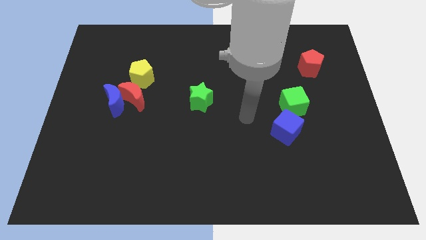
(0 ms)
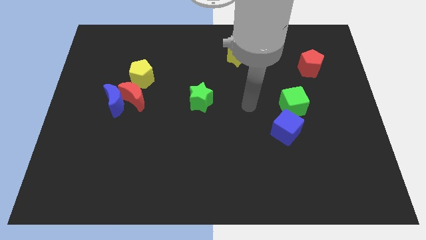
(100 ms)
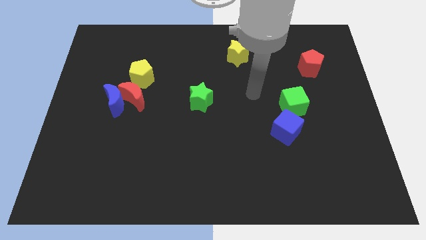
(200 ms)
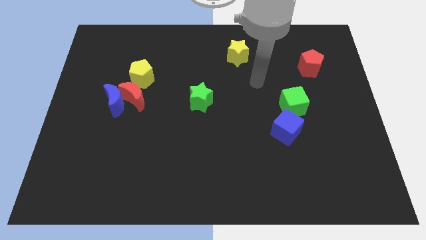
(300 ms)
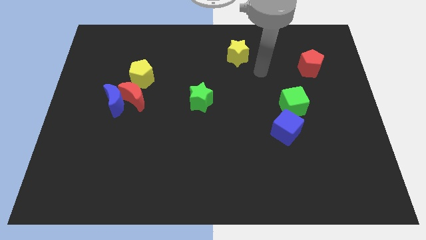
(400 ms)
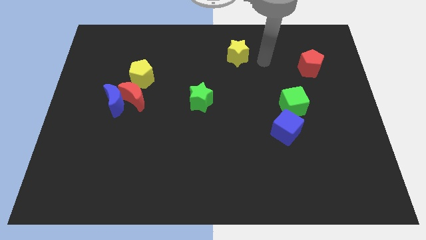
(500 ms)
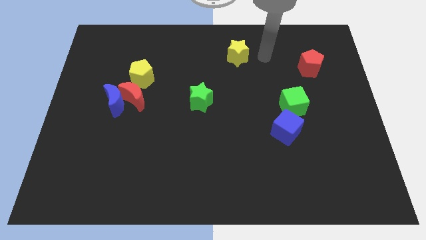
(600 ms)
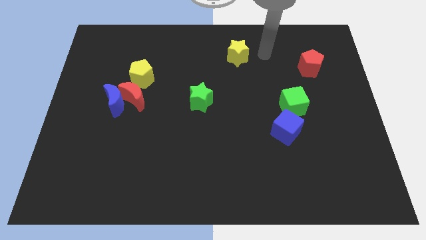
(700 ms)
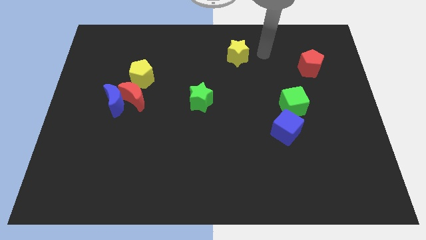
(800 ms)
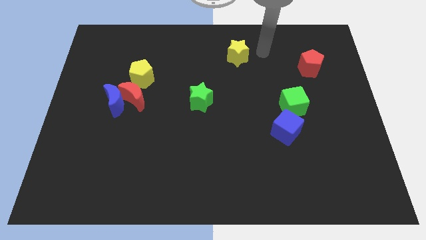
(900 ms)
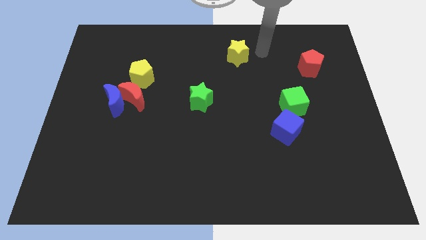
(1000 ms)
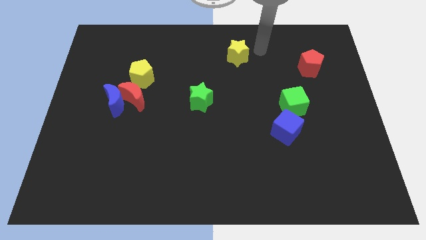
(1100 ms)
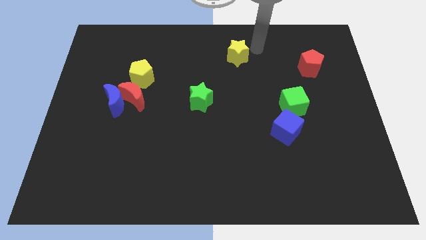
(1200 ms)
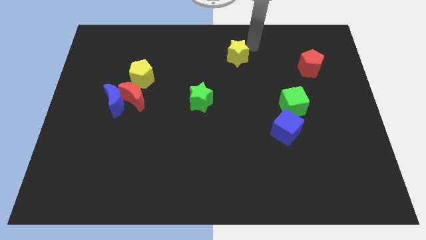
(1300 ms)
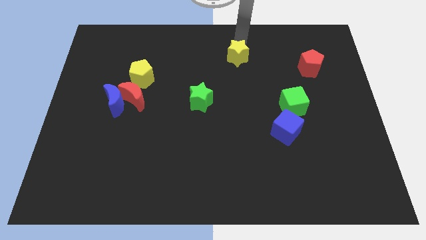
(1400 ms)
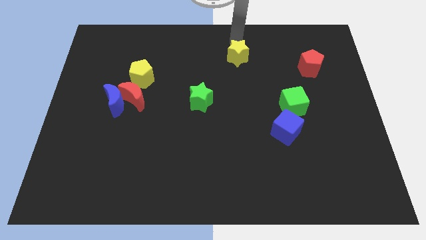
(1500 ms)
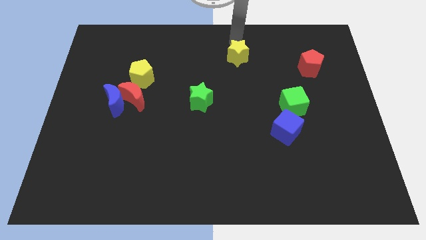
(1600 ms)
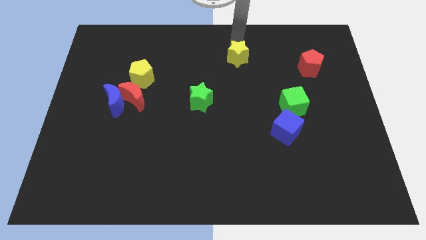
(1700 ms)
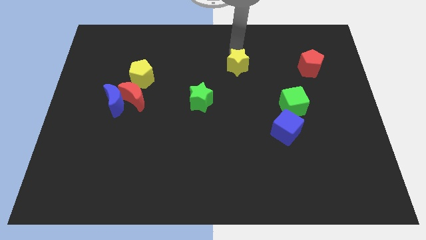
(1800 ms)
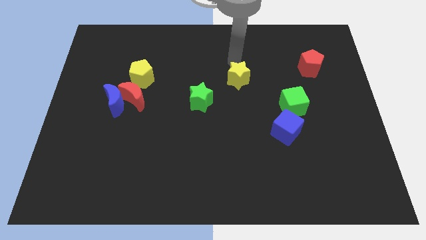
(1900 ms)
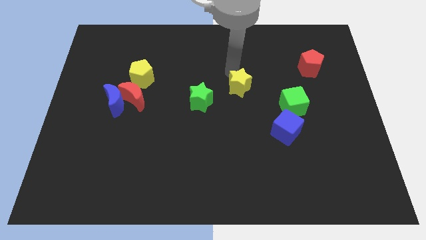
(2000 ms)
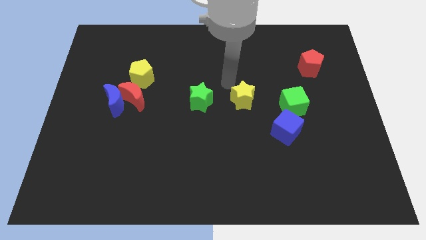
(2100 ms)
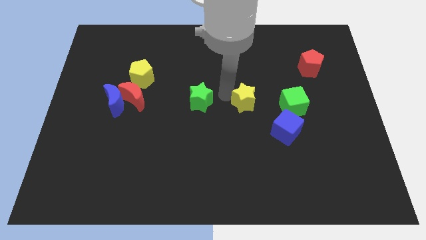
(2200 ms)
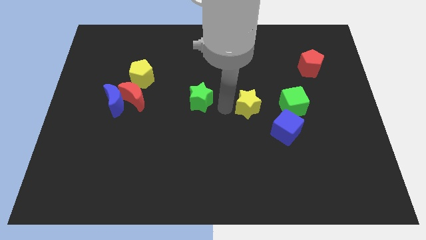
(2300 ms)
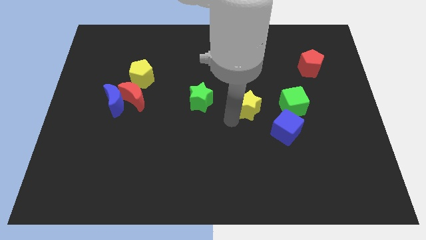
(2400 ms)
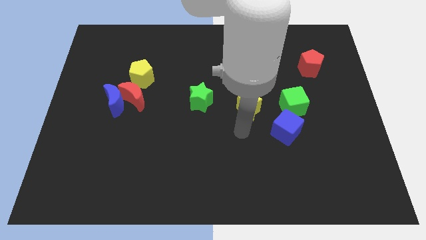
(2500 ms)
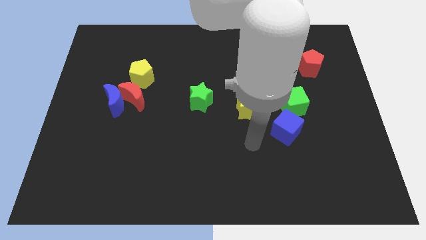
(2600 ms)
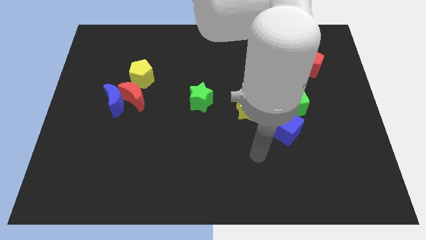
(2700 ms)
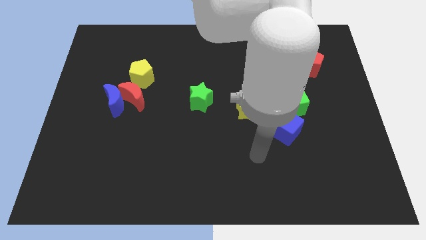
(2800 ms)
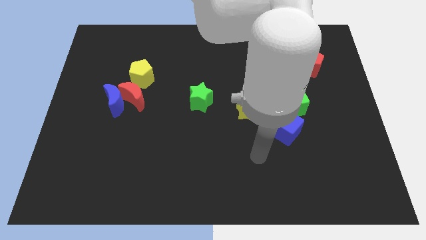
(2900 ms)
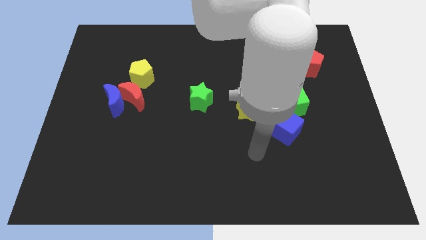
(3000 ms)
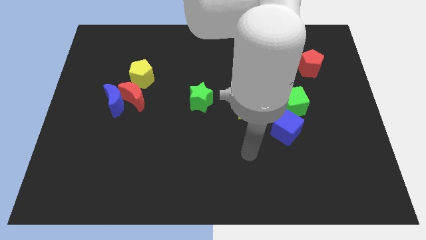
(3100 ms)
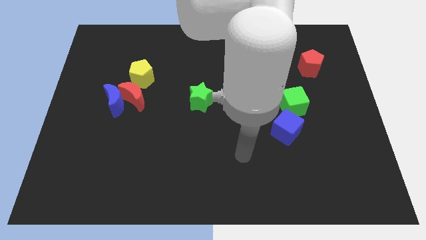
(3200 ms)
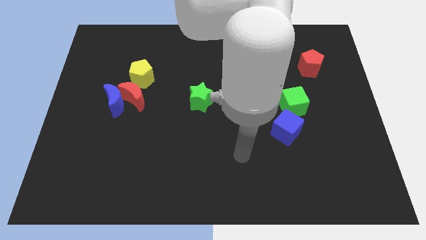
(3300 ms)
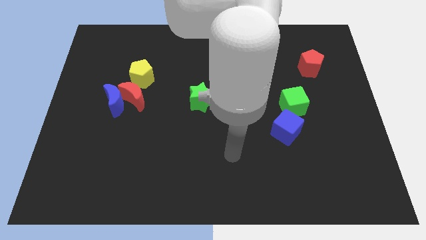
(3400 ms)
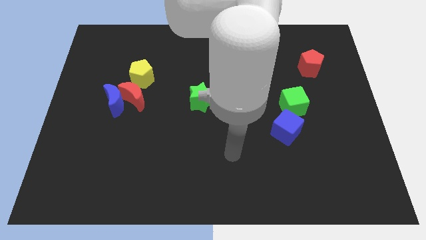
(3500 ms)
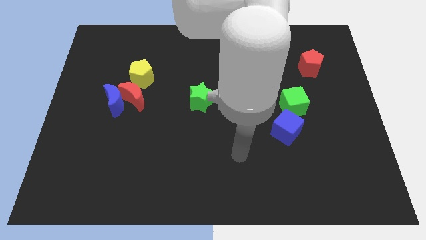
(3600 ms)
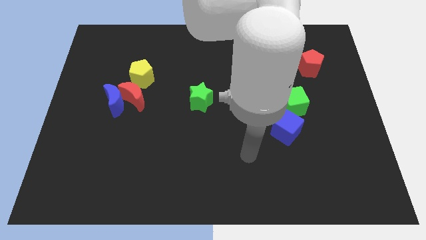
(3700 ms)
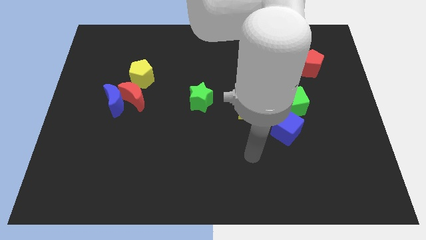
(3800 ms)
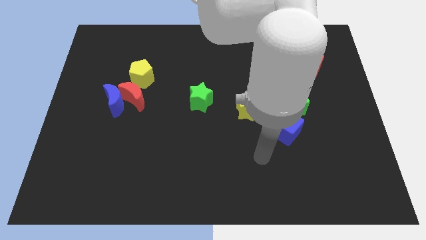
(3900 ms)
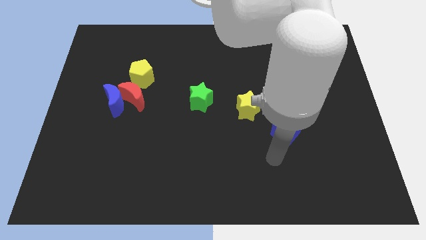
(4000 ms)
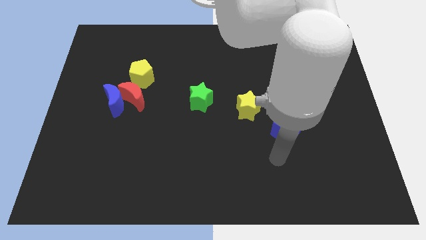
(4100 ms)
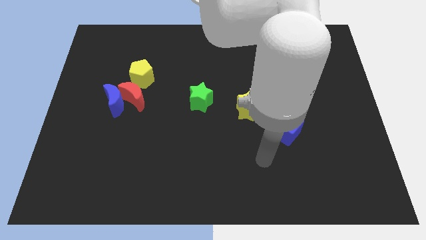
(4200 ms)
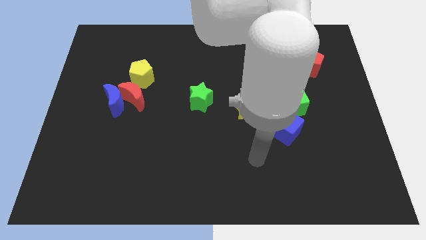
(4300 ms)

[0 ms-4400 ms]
move the yellow star diagonal to the right of the green star

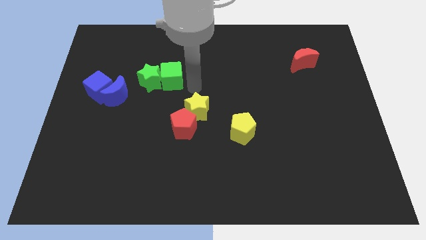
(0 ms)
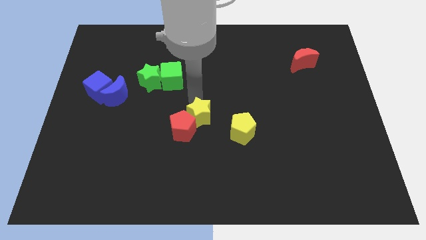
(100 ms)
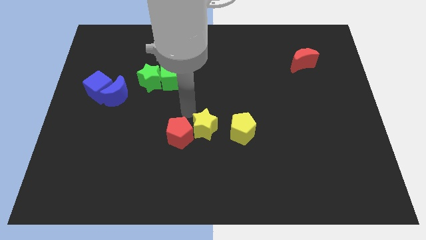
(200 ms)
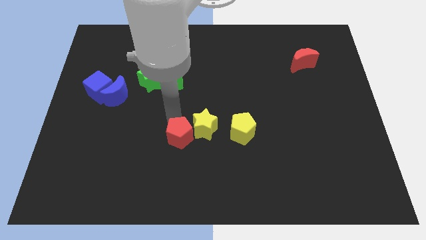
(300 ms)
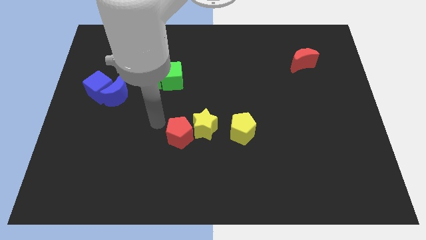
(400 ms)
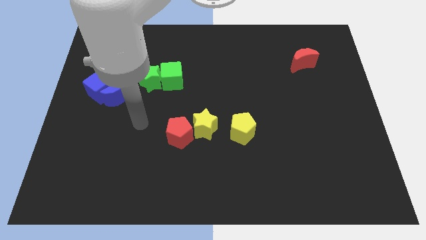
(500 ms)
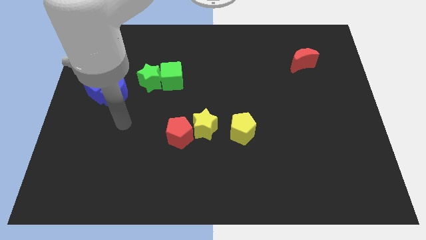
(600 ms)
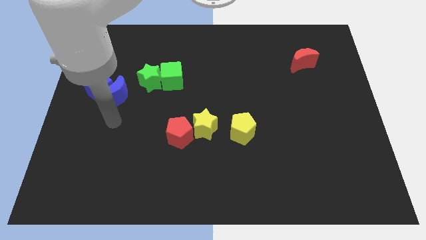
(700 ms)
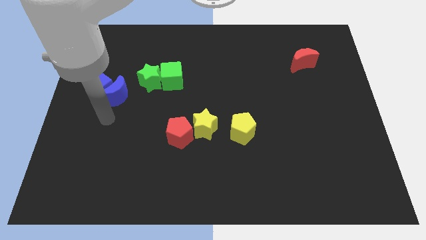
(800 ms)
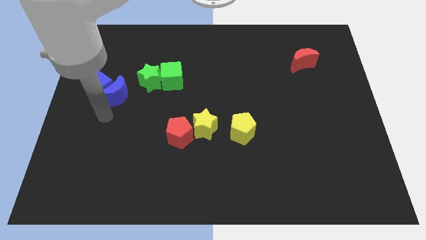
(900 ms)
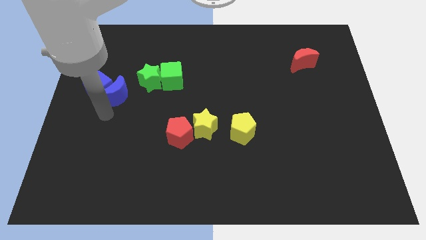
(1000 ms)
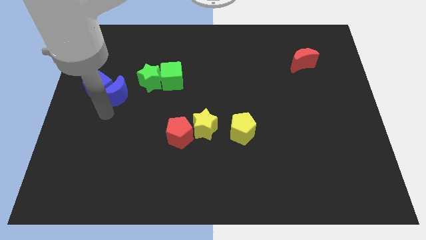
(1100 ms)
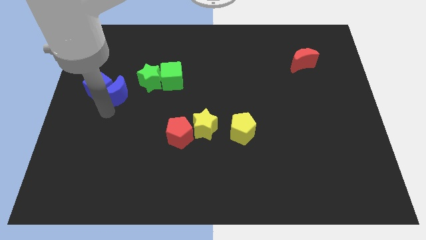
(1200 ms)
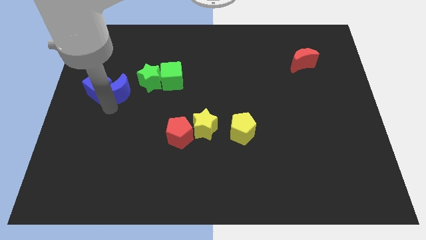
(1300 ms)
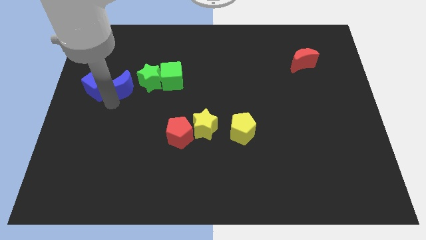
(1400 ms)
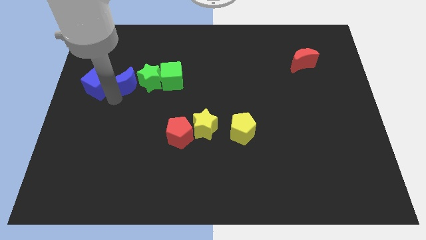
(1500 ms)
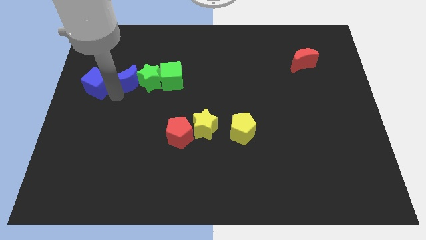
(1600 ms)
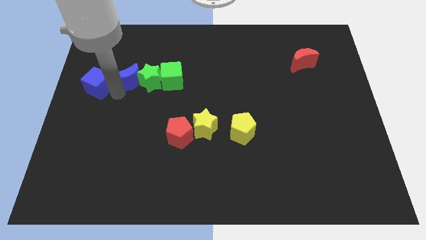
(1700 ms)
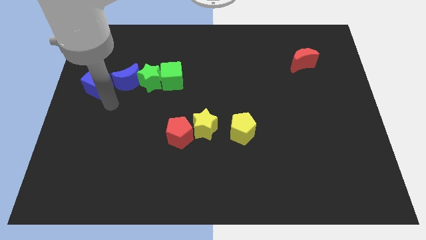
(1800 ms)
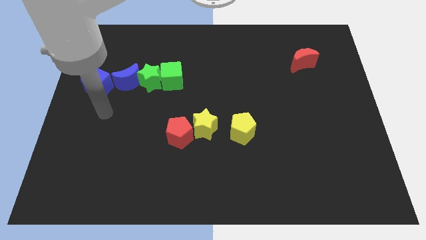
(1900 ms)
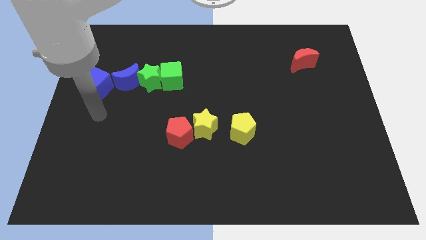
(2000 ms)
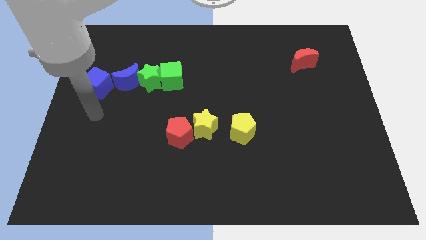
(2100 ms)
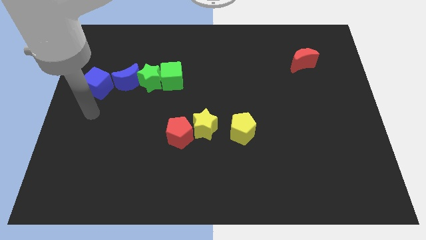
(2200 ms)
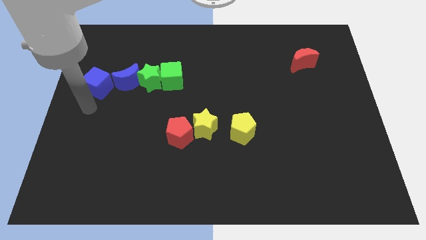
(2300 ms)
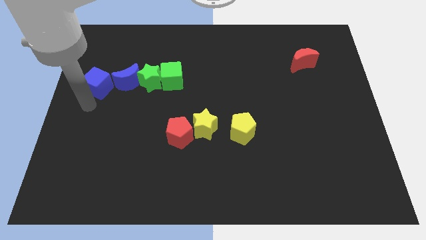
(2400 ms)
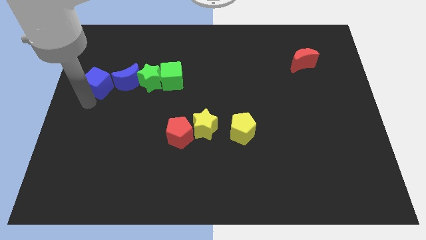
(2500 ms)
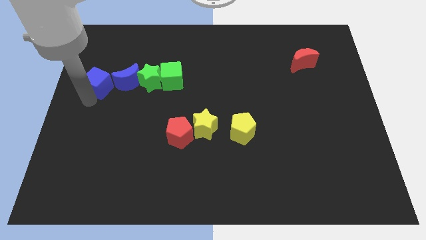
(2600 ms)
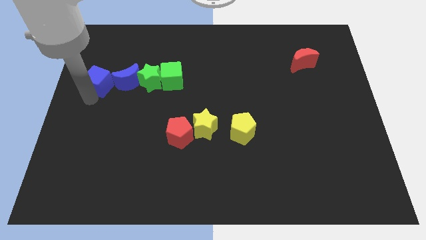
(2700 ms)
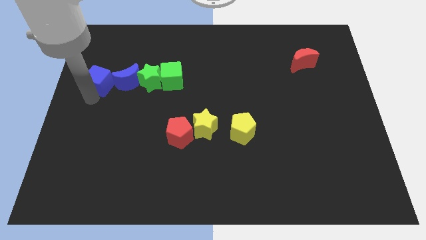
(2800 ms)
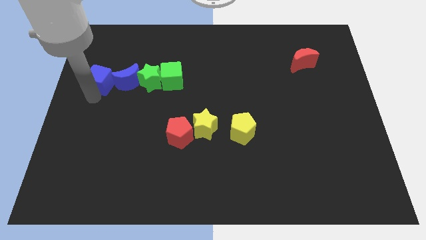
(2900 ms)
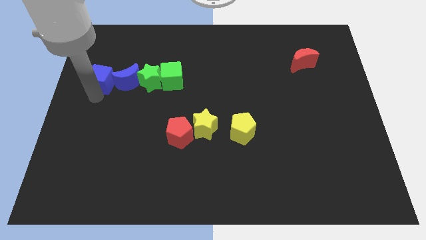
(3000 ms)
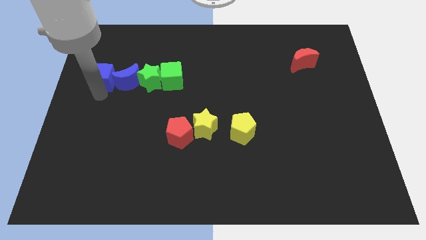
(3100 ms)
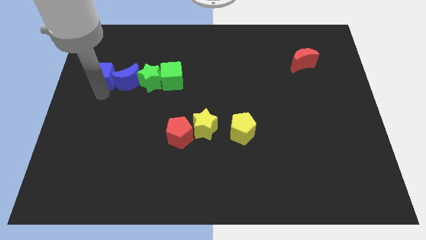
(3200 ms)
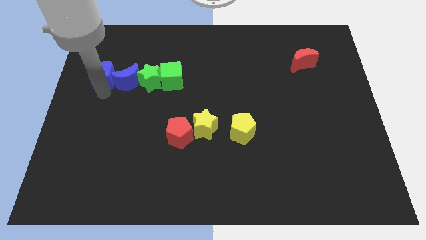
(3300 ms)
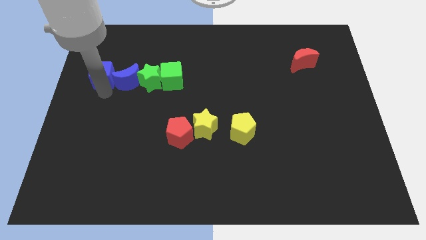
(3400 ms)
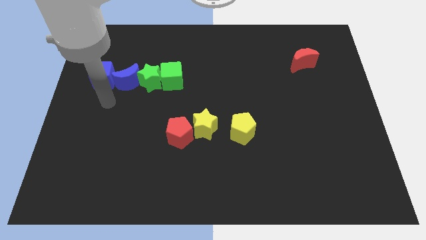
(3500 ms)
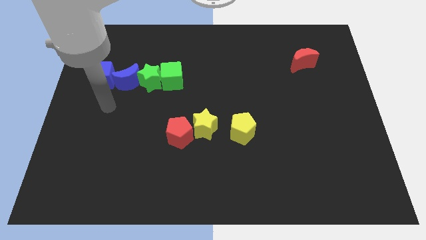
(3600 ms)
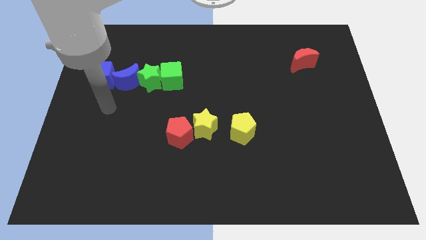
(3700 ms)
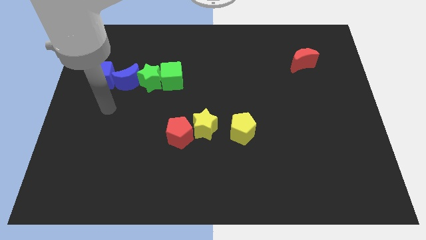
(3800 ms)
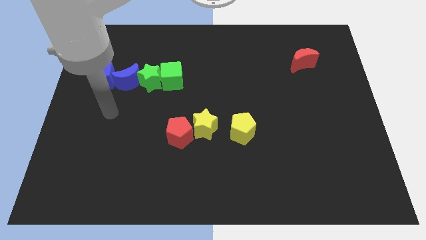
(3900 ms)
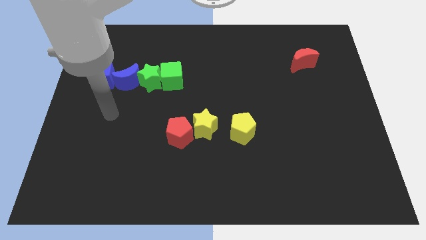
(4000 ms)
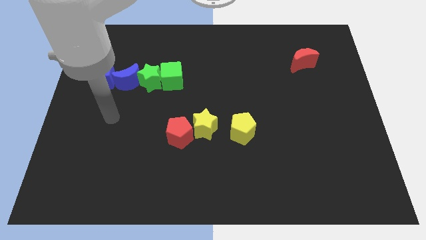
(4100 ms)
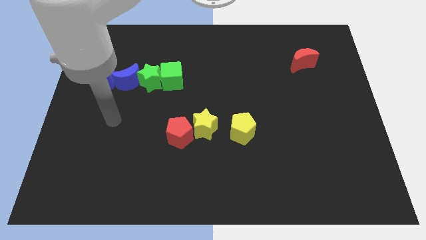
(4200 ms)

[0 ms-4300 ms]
place blue moon in between blue cube and green star

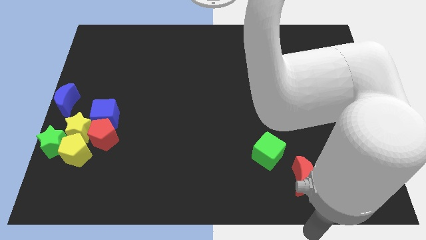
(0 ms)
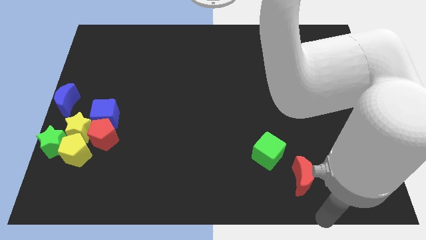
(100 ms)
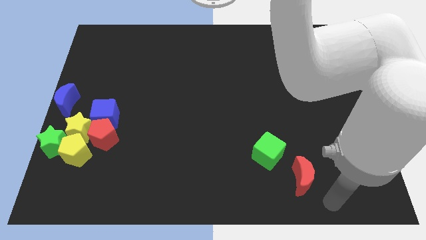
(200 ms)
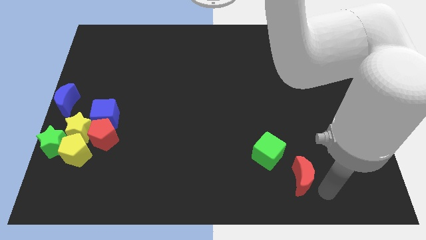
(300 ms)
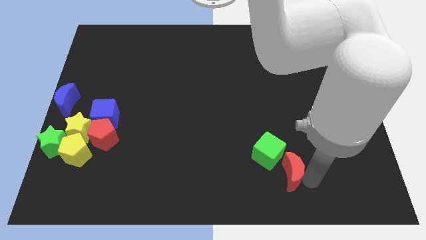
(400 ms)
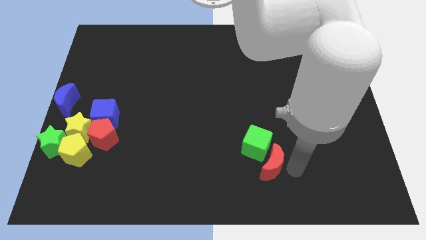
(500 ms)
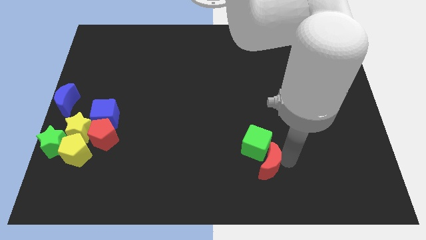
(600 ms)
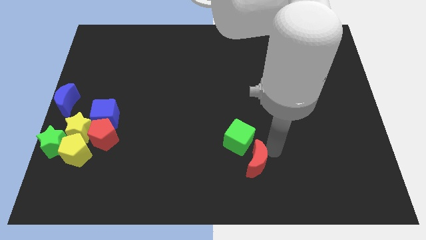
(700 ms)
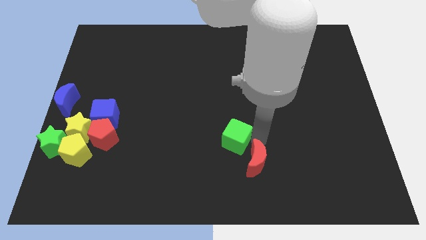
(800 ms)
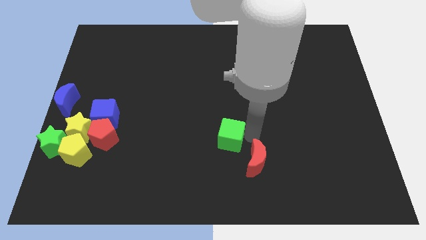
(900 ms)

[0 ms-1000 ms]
slide the red moon into the green cube
